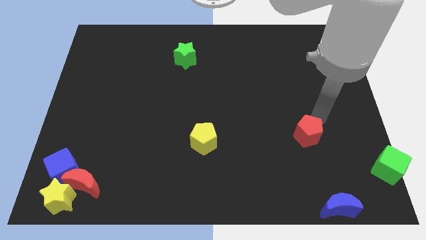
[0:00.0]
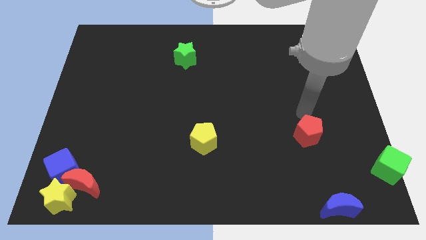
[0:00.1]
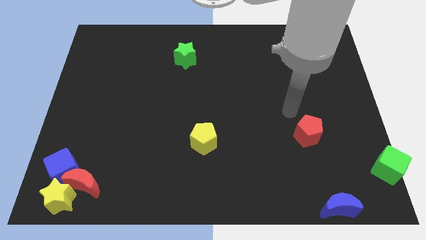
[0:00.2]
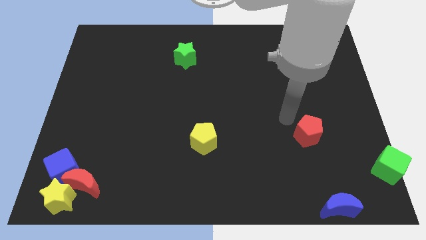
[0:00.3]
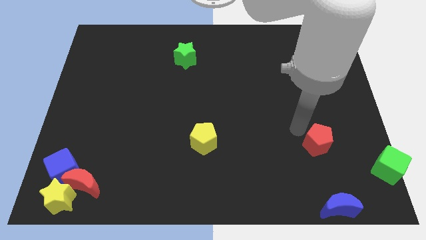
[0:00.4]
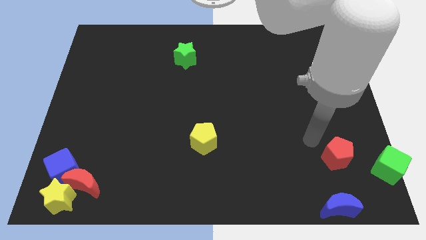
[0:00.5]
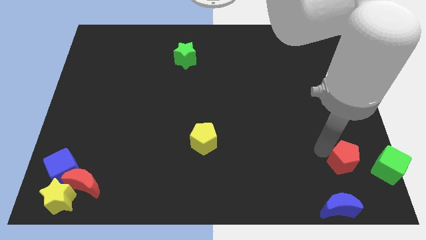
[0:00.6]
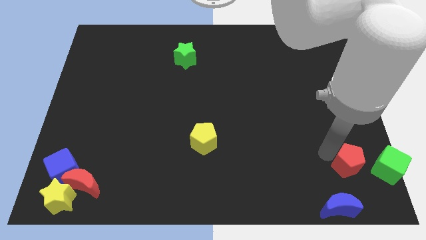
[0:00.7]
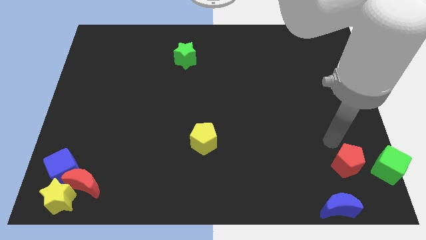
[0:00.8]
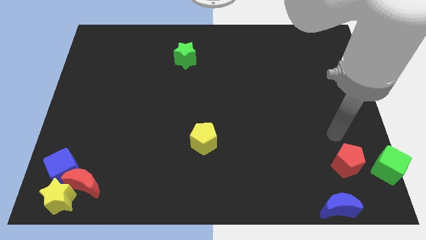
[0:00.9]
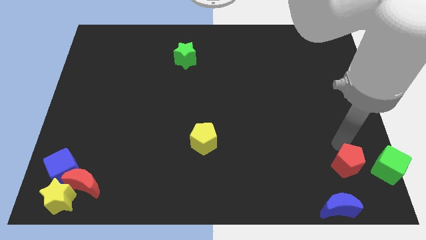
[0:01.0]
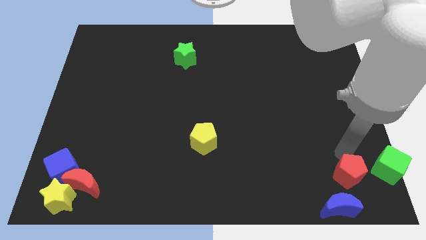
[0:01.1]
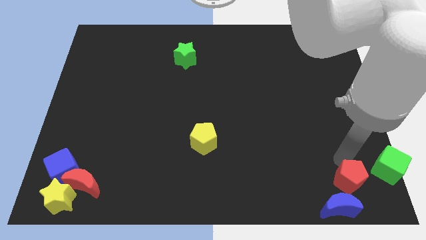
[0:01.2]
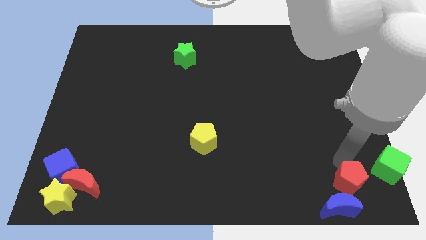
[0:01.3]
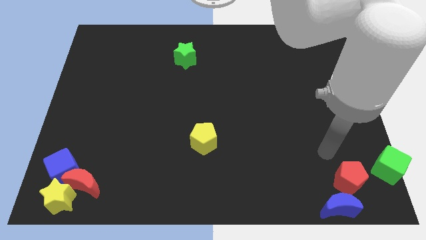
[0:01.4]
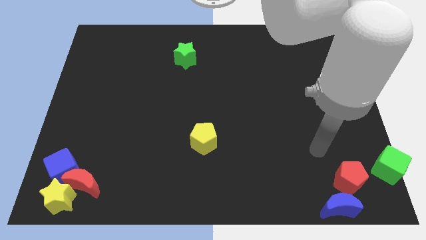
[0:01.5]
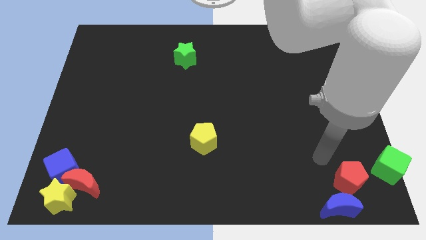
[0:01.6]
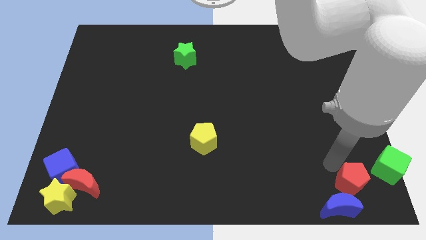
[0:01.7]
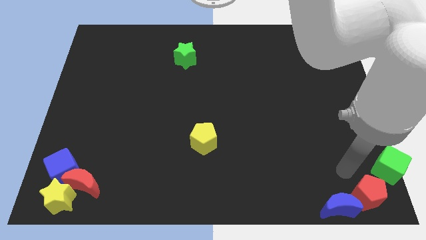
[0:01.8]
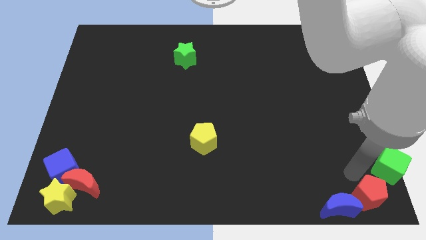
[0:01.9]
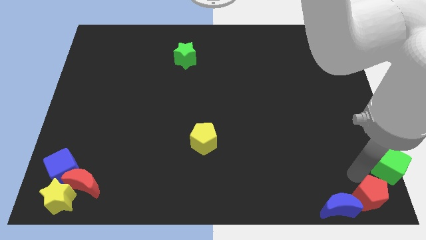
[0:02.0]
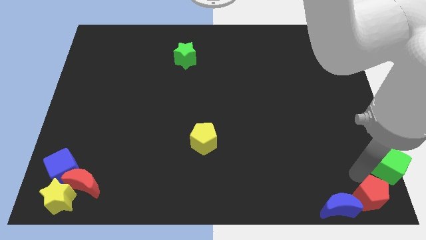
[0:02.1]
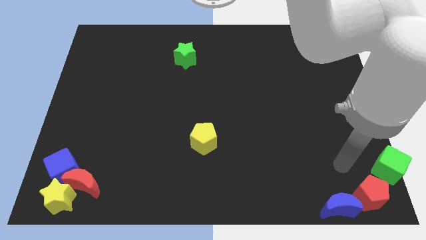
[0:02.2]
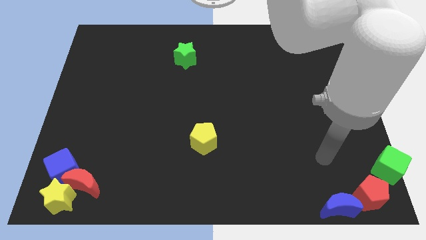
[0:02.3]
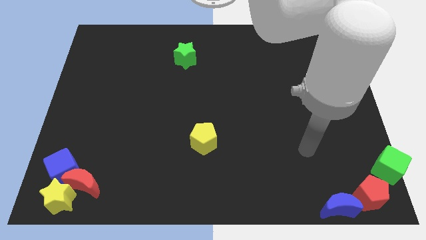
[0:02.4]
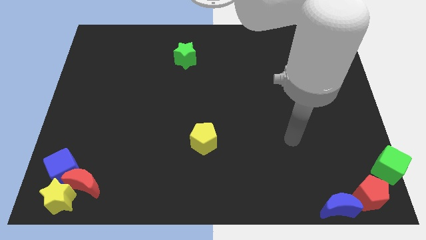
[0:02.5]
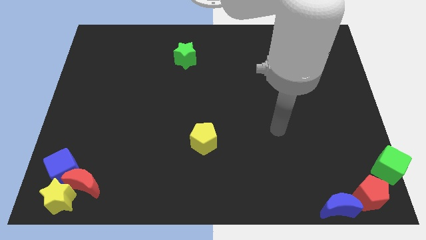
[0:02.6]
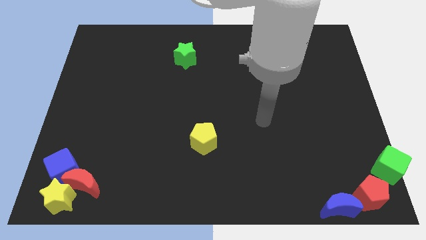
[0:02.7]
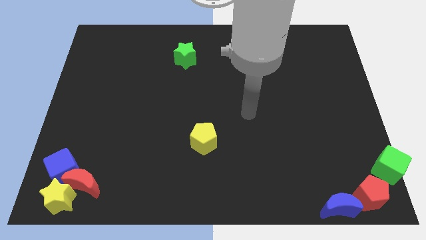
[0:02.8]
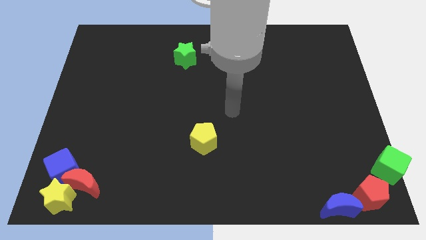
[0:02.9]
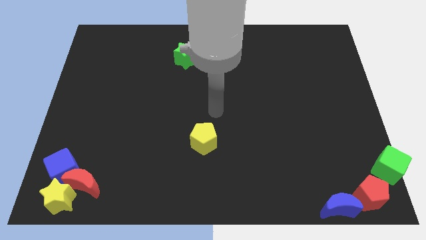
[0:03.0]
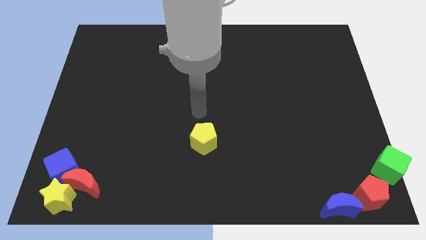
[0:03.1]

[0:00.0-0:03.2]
place the red pentagon at the bottom right corner of the board

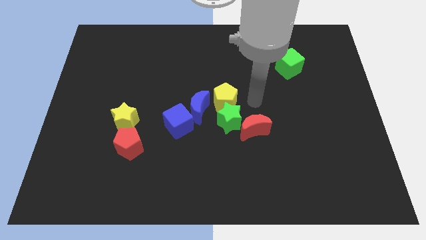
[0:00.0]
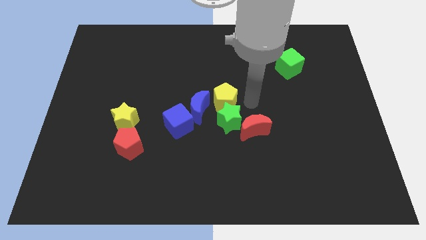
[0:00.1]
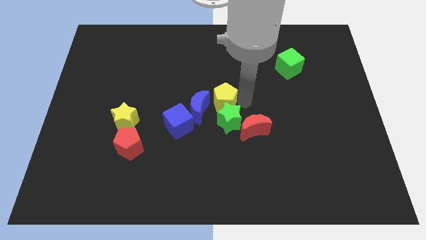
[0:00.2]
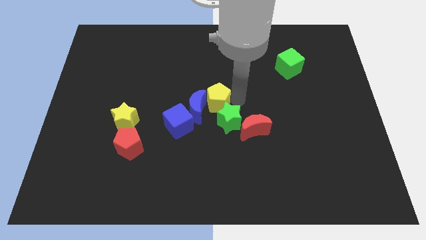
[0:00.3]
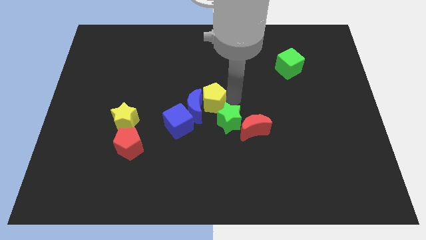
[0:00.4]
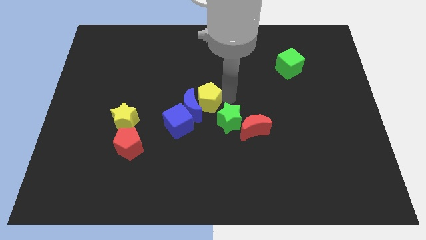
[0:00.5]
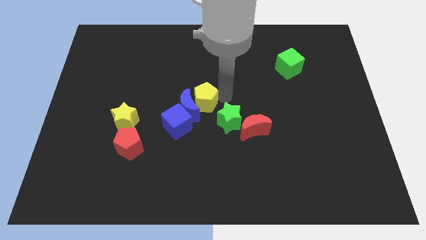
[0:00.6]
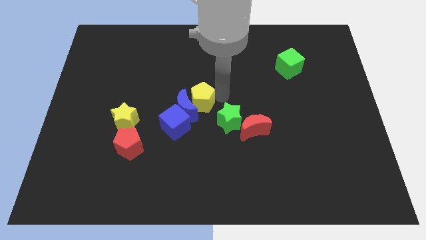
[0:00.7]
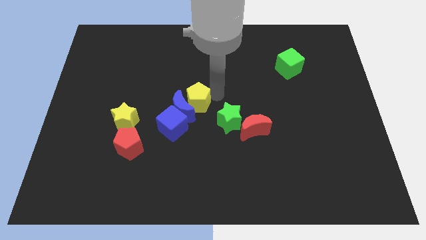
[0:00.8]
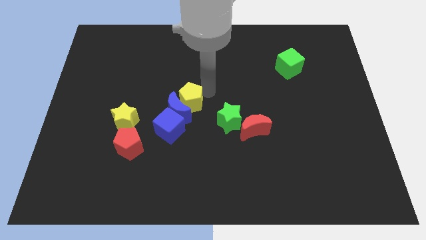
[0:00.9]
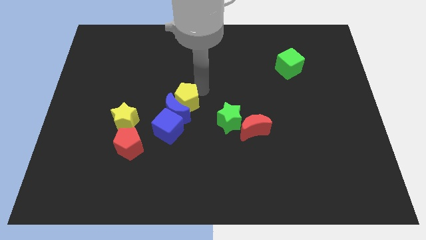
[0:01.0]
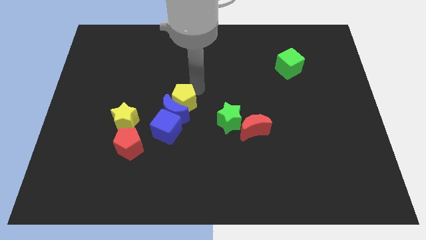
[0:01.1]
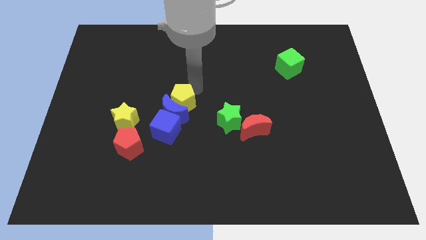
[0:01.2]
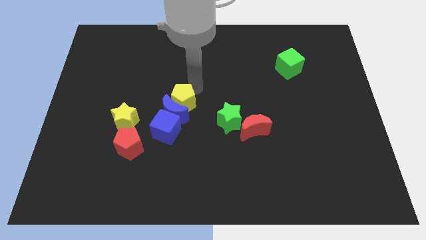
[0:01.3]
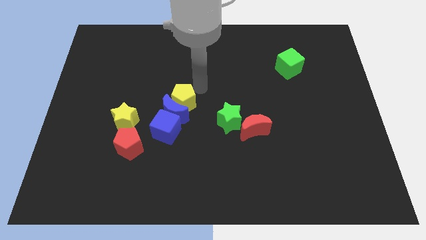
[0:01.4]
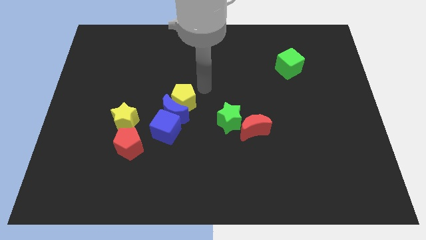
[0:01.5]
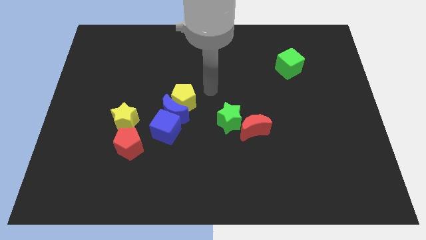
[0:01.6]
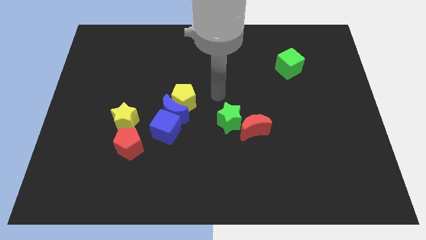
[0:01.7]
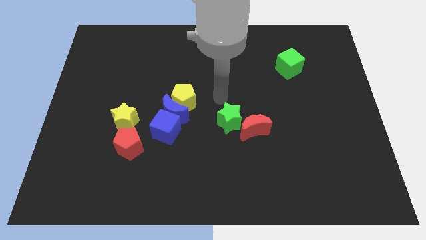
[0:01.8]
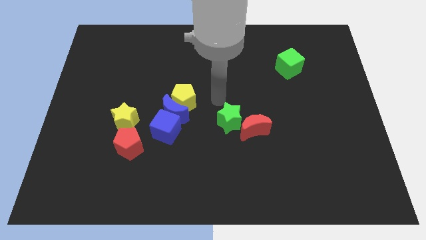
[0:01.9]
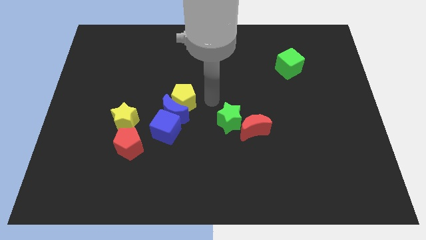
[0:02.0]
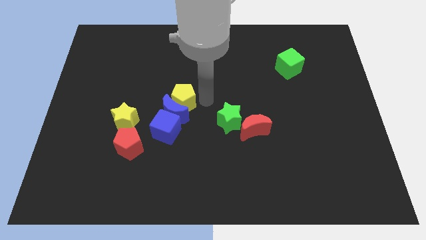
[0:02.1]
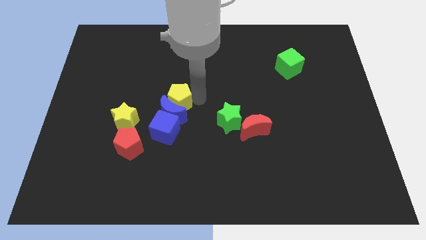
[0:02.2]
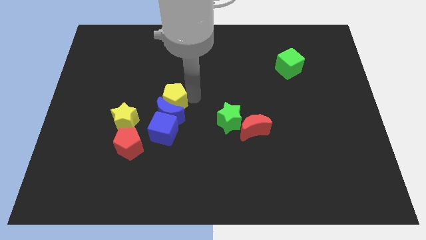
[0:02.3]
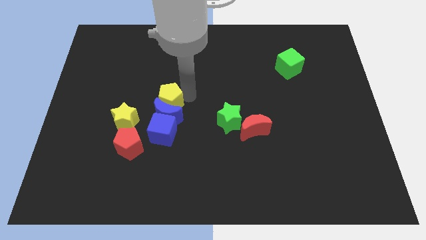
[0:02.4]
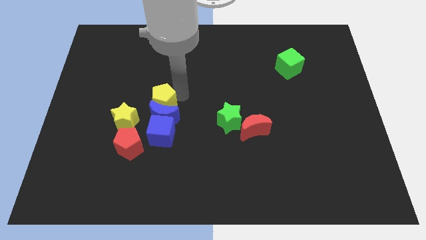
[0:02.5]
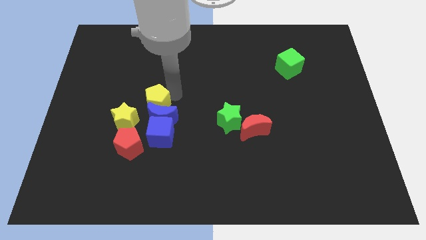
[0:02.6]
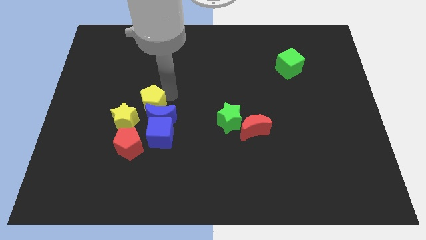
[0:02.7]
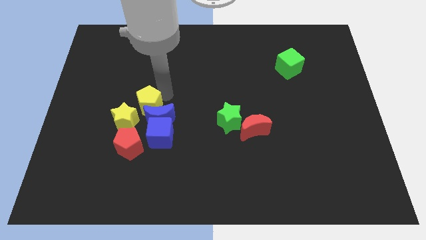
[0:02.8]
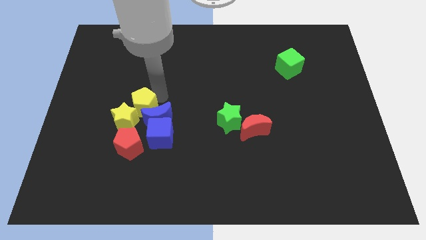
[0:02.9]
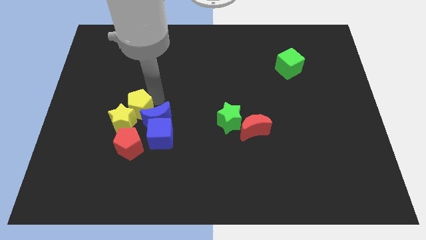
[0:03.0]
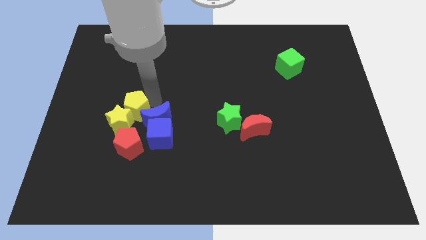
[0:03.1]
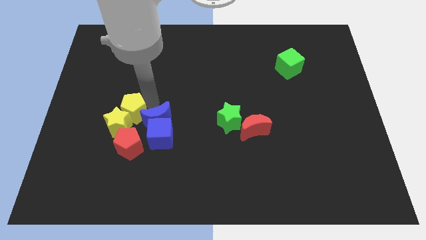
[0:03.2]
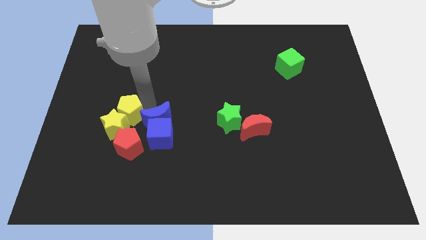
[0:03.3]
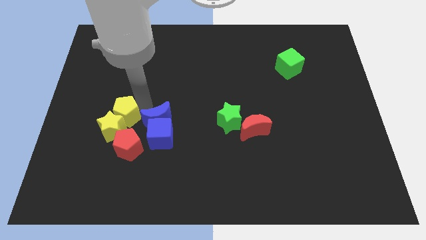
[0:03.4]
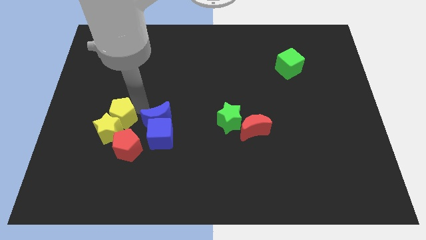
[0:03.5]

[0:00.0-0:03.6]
place the yellow pentagon into the yellow star

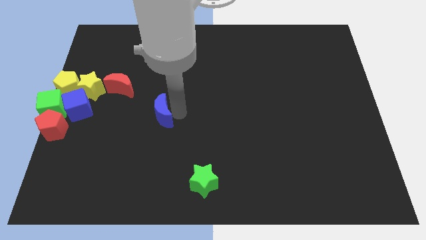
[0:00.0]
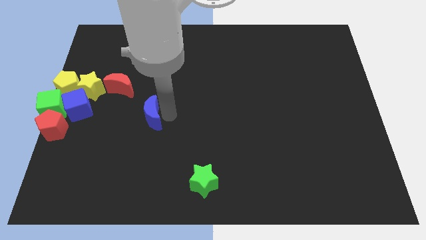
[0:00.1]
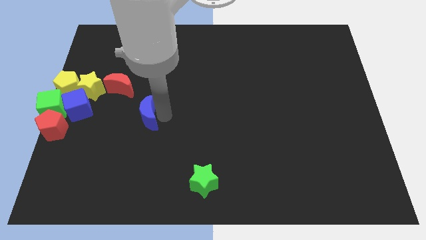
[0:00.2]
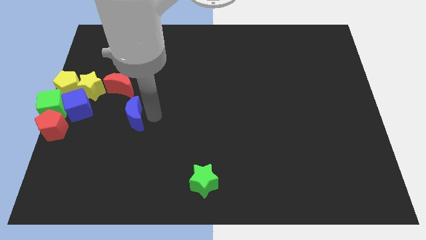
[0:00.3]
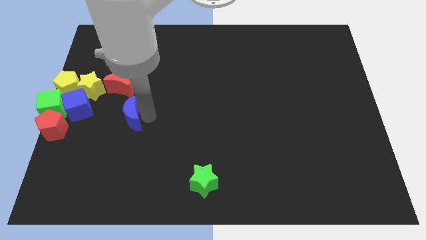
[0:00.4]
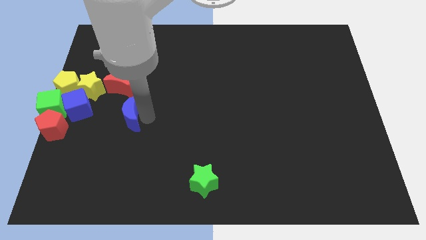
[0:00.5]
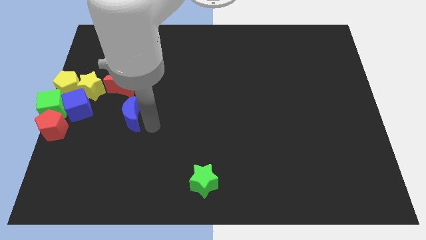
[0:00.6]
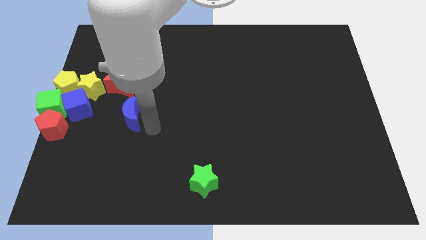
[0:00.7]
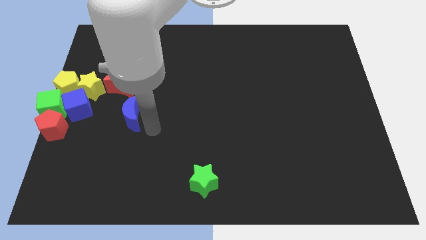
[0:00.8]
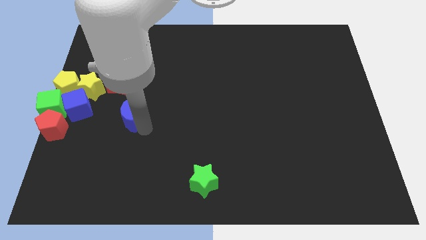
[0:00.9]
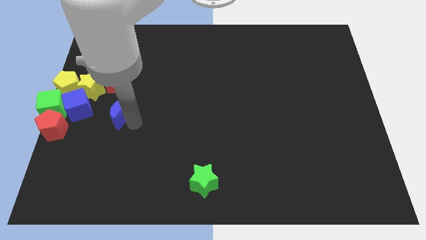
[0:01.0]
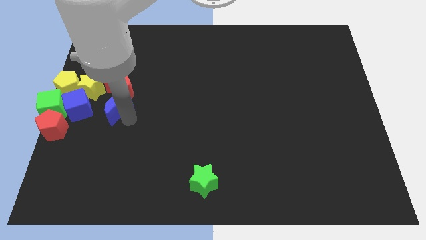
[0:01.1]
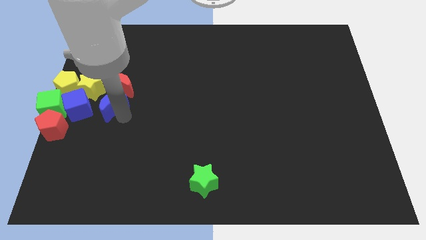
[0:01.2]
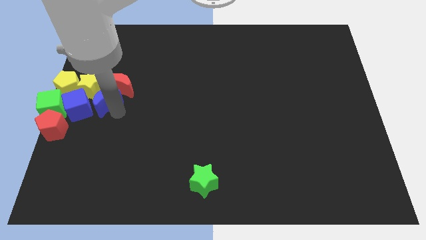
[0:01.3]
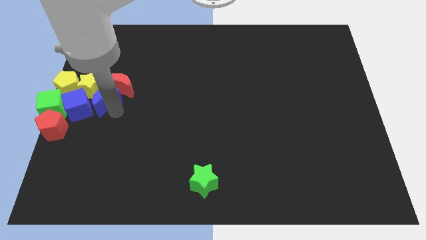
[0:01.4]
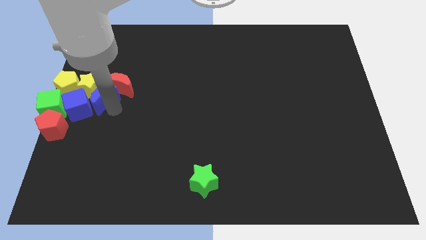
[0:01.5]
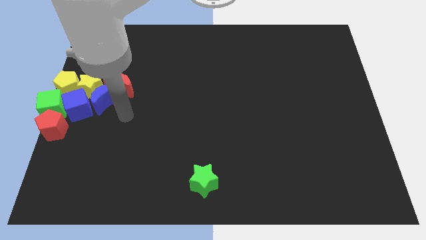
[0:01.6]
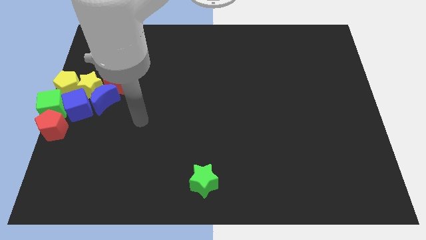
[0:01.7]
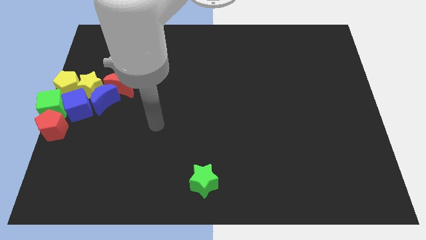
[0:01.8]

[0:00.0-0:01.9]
move the blue moon into the blue cube

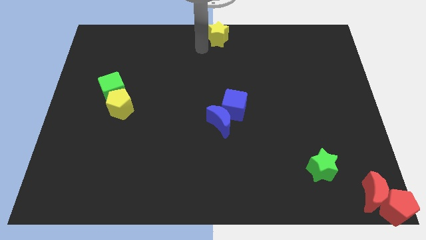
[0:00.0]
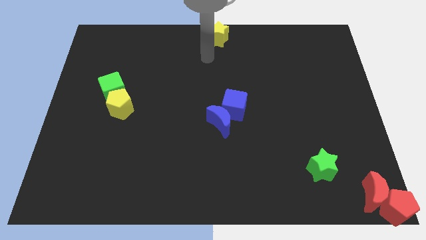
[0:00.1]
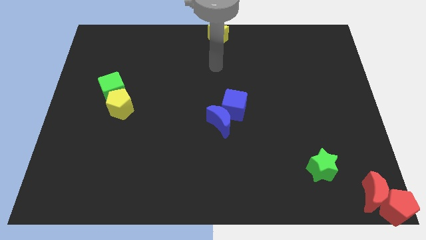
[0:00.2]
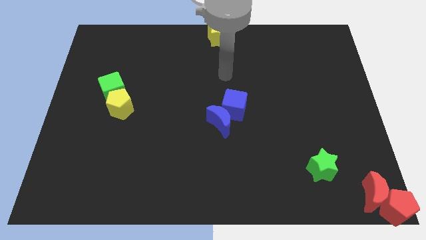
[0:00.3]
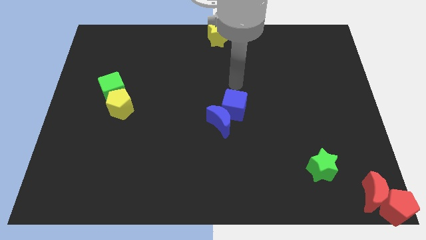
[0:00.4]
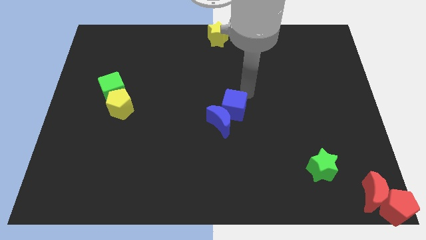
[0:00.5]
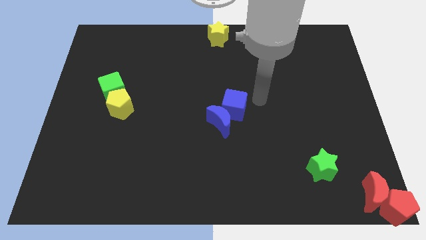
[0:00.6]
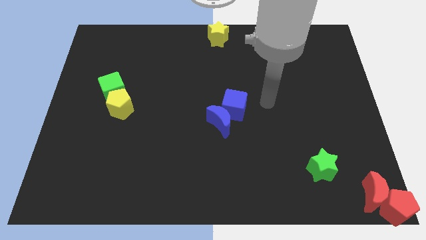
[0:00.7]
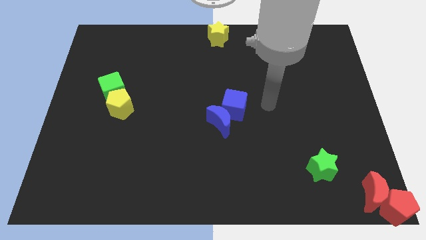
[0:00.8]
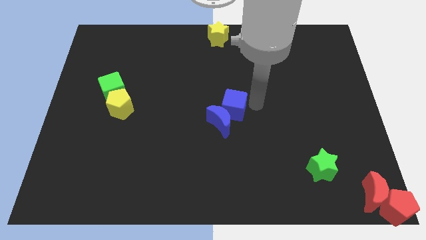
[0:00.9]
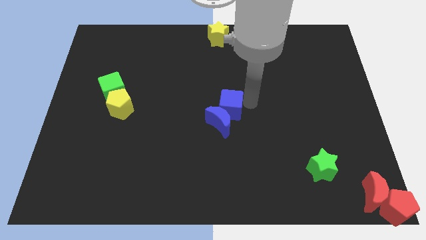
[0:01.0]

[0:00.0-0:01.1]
move the arm to the right of the blue cube
